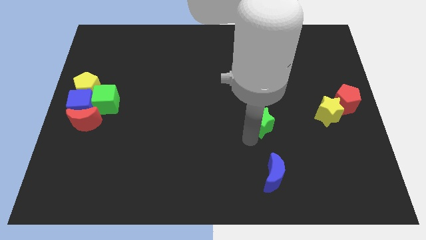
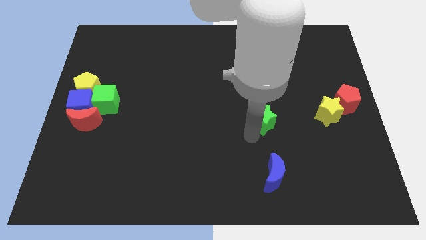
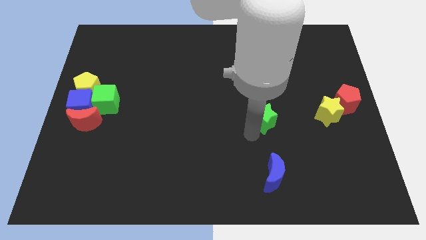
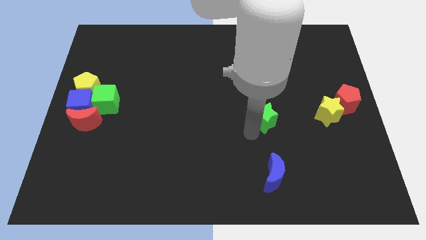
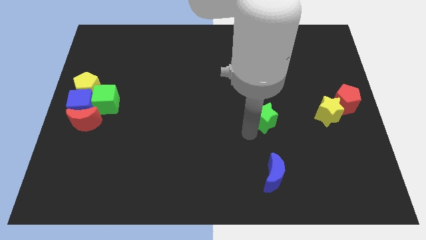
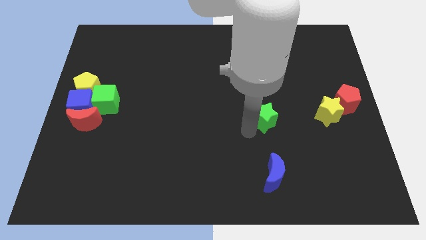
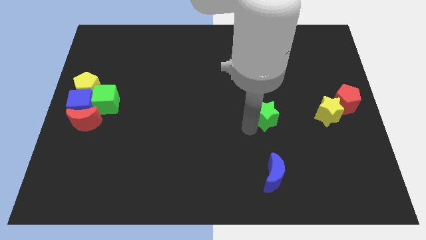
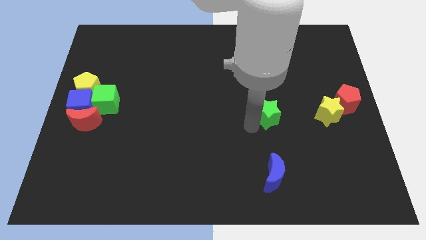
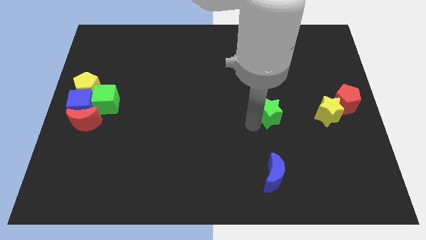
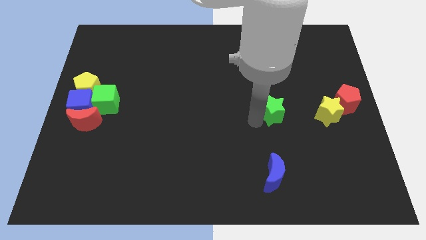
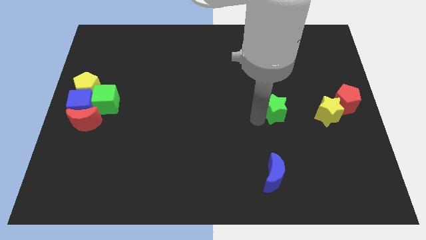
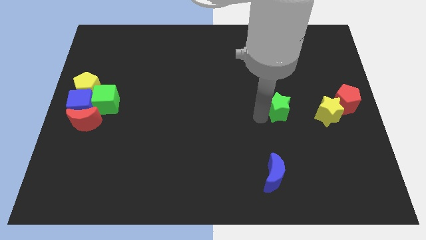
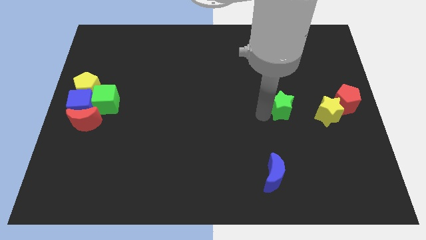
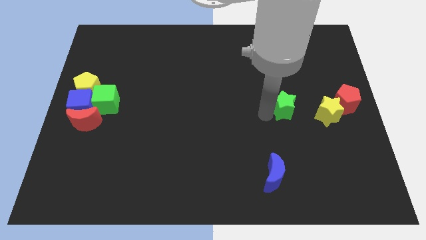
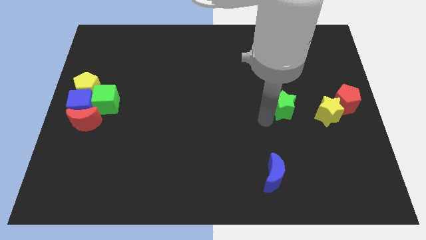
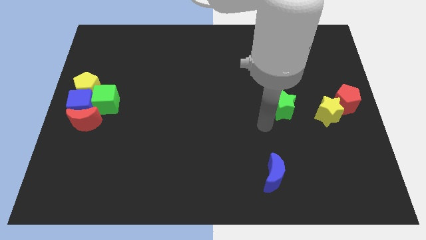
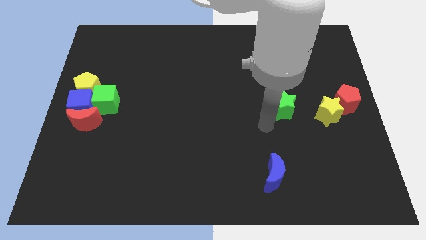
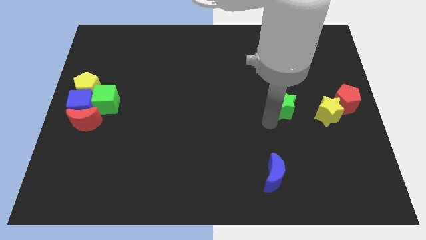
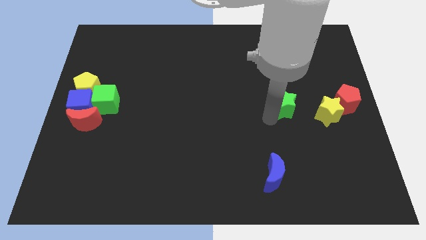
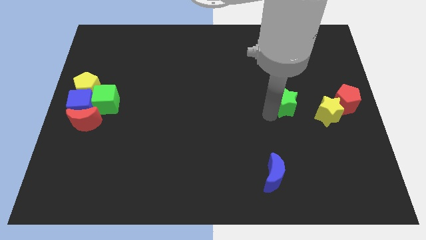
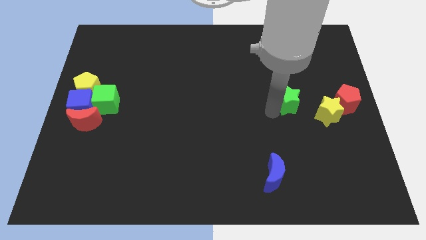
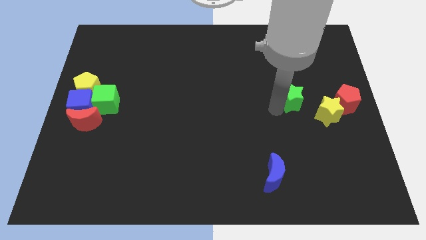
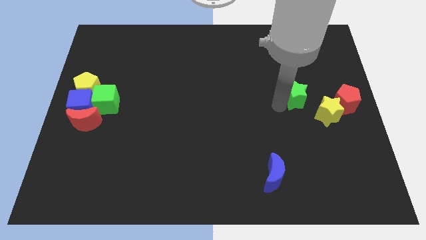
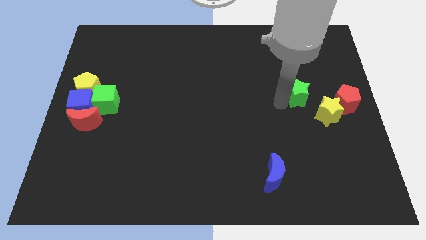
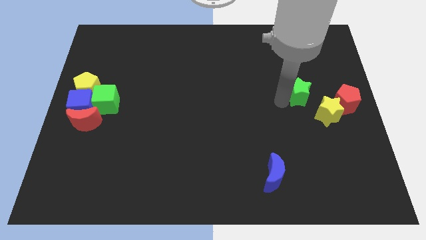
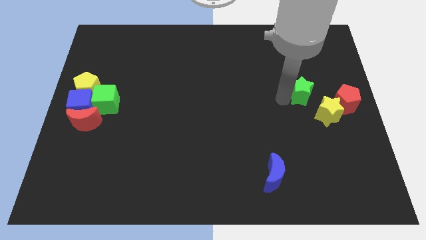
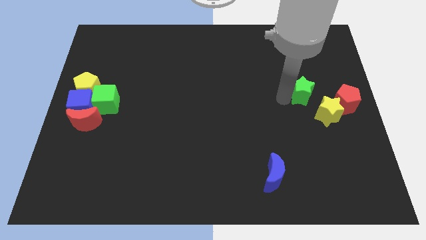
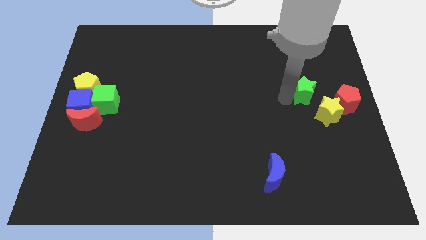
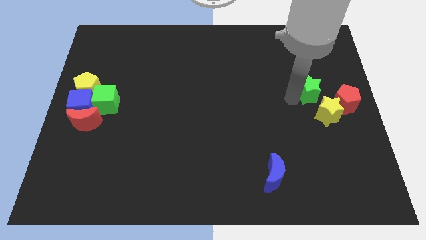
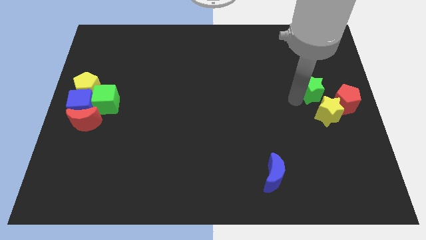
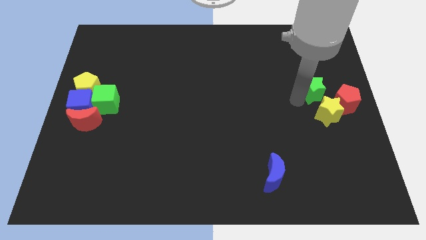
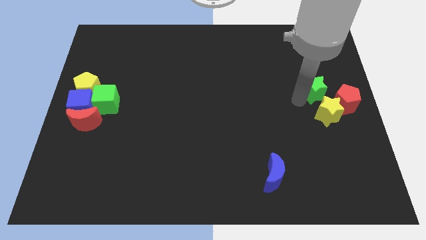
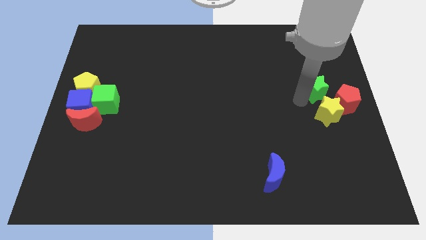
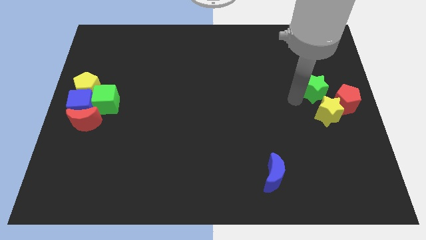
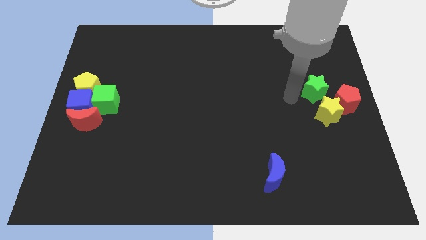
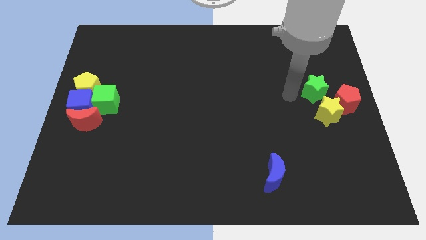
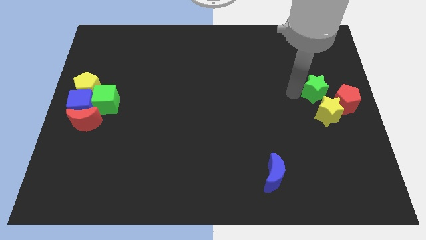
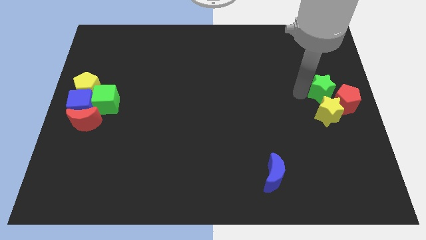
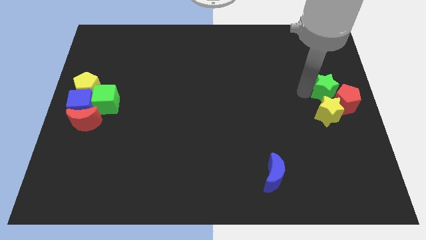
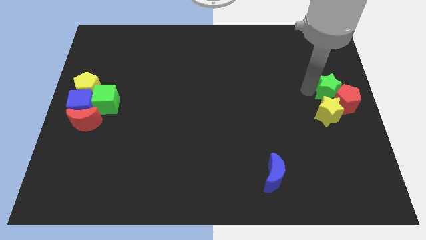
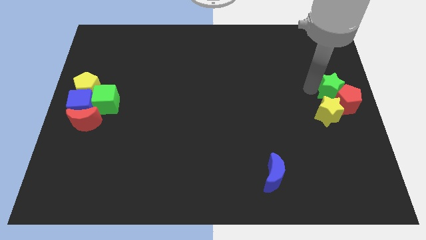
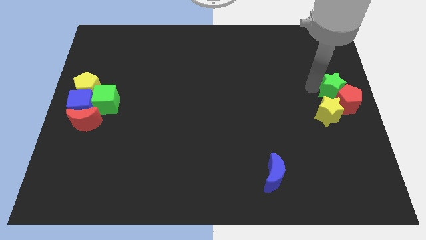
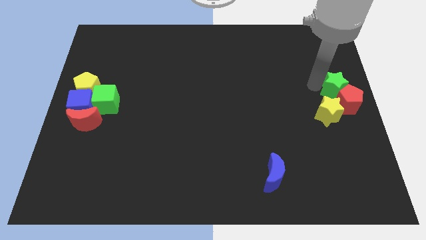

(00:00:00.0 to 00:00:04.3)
push the green star into the red pentagon

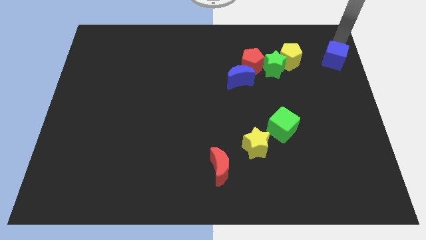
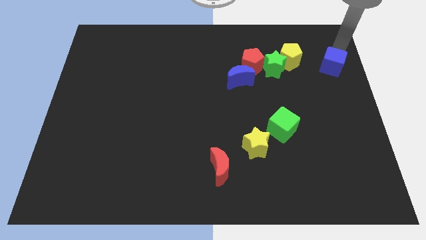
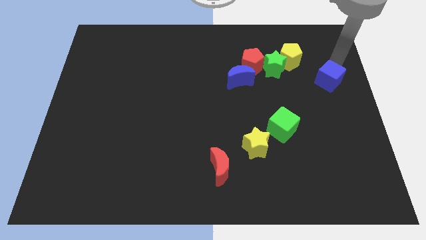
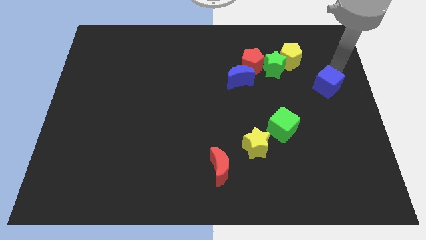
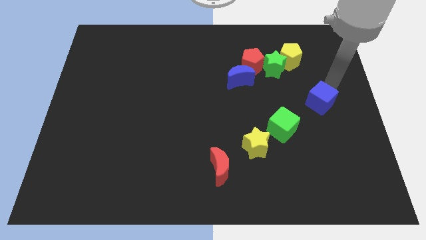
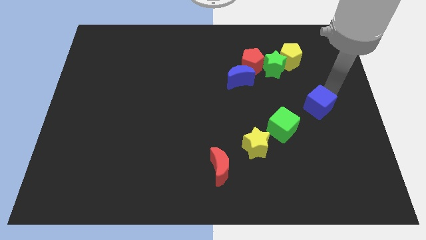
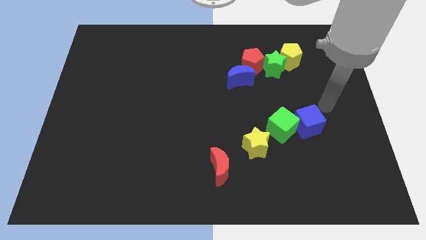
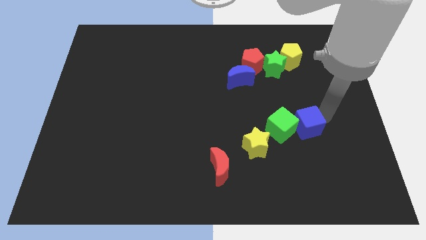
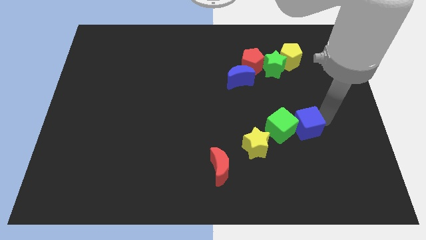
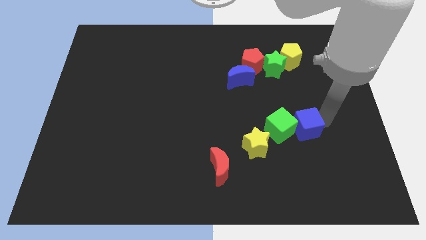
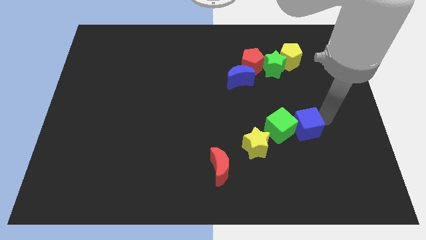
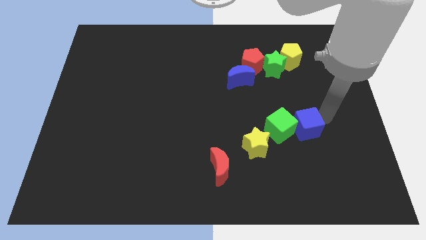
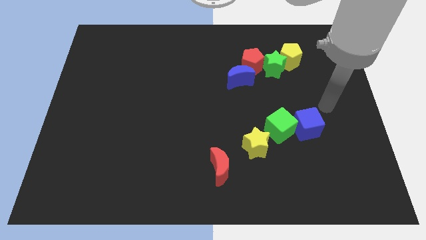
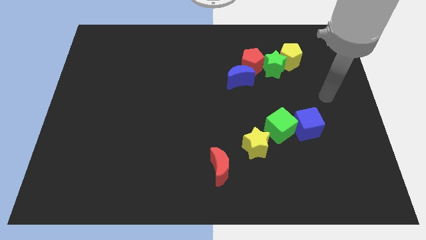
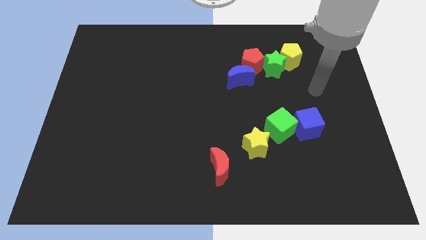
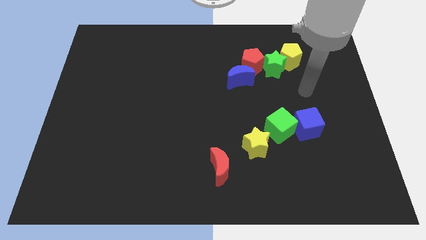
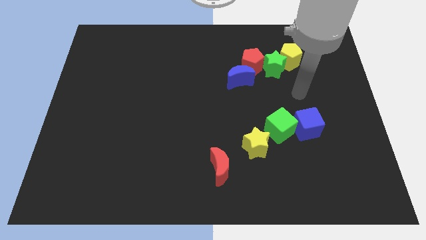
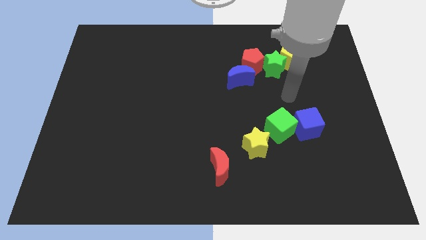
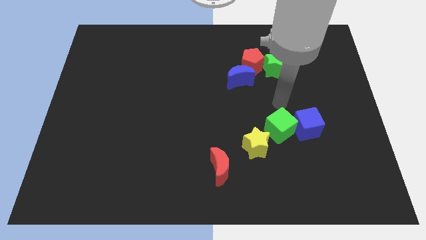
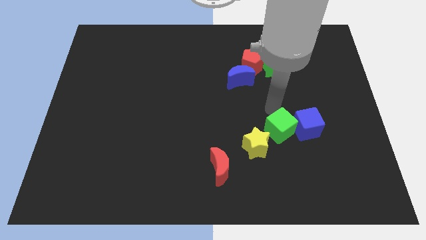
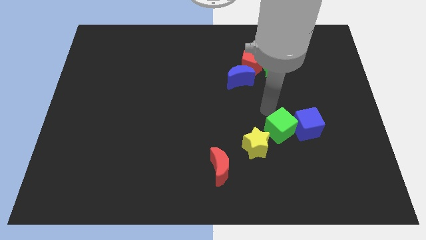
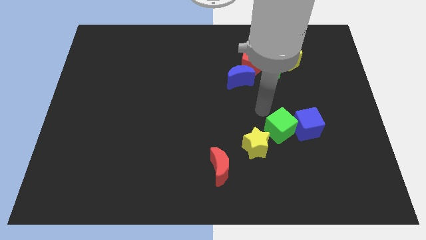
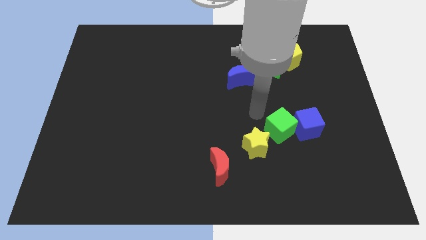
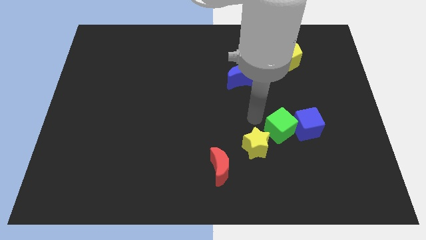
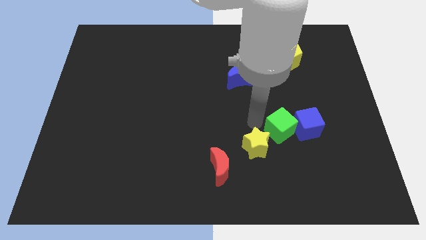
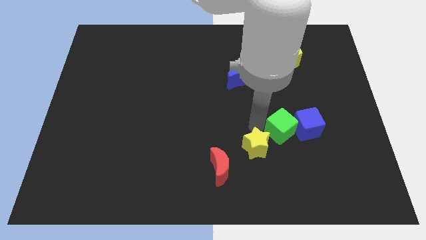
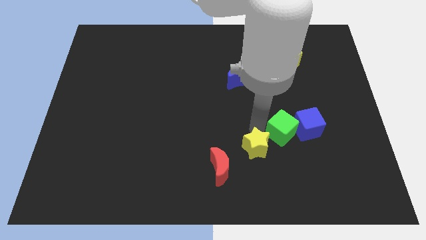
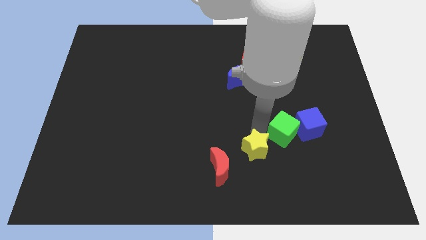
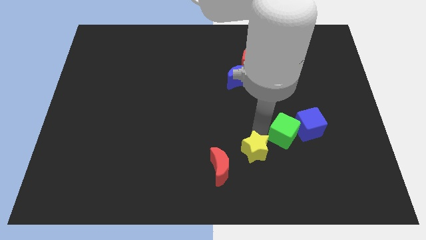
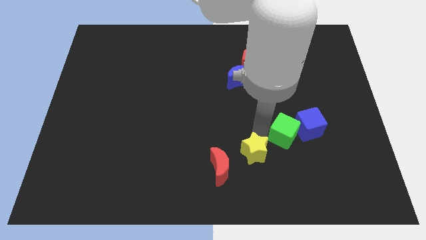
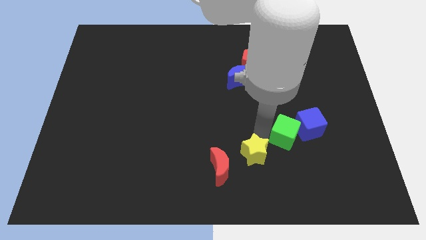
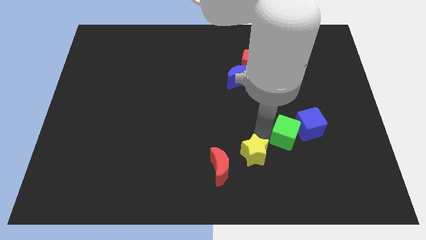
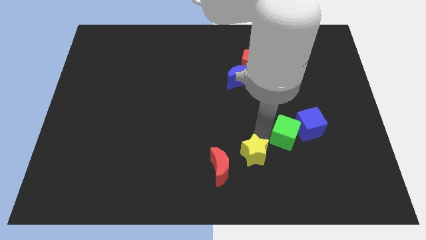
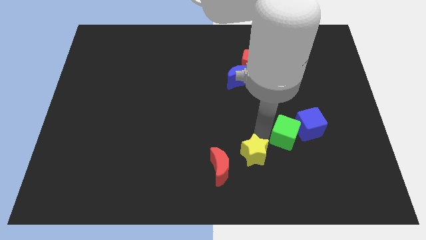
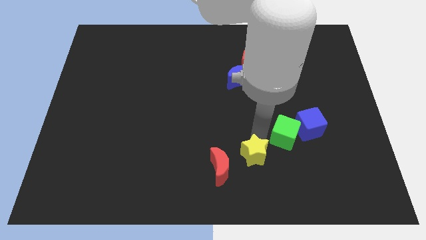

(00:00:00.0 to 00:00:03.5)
make a diagonal line with the blue cube green cube yellow star and red moon

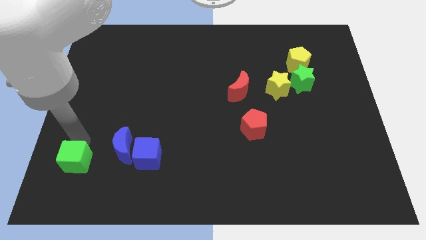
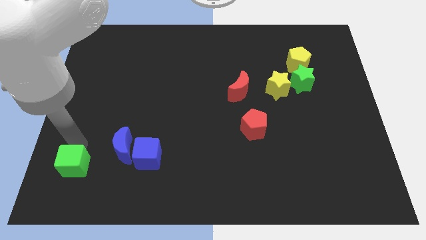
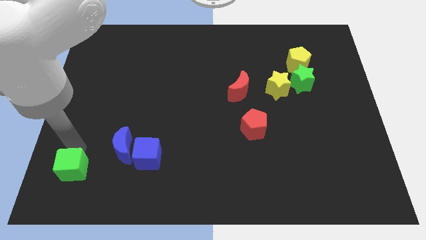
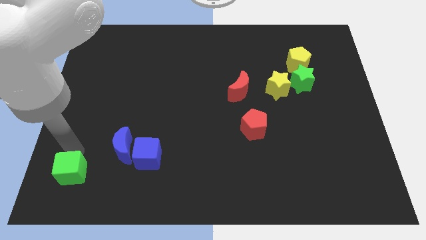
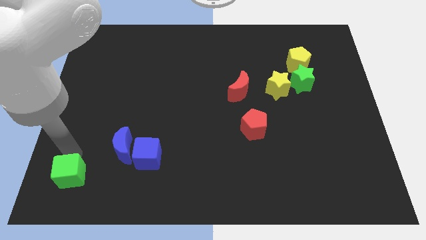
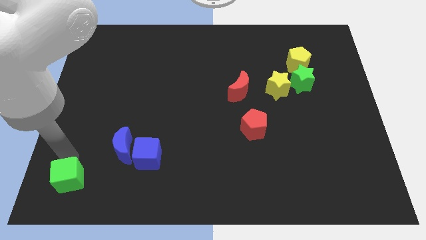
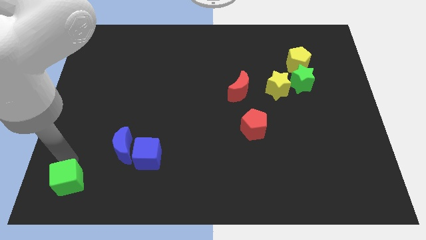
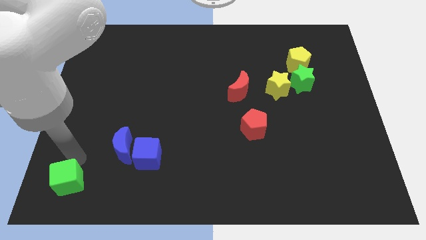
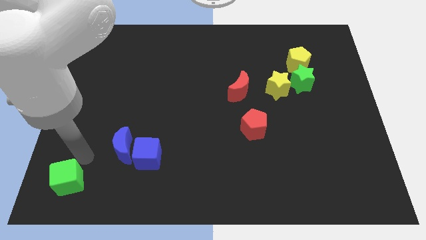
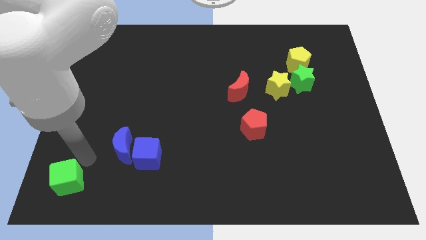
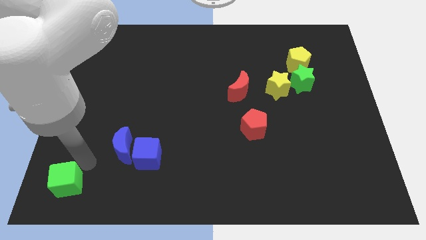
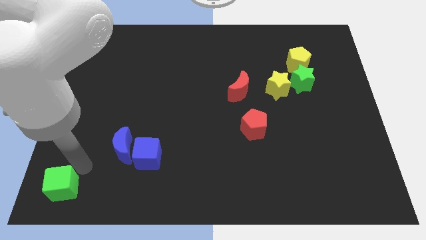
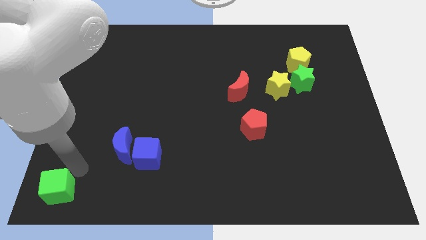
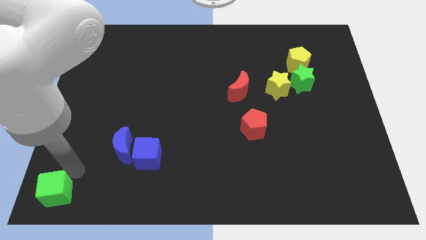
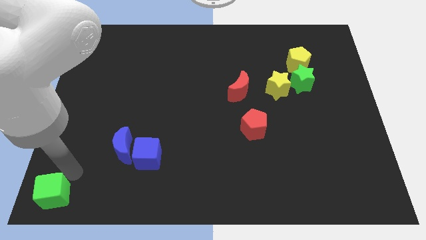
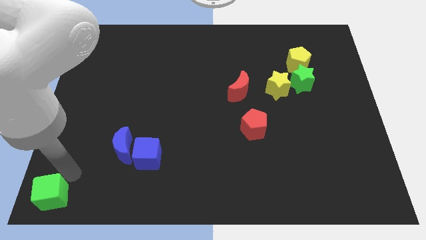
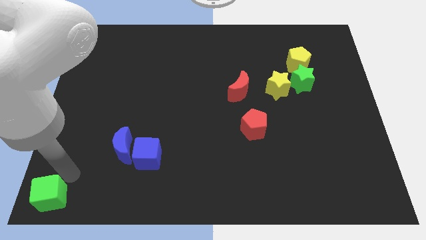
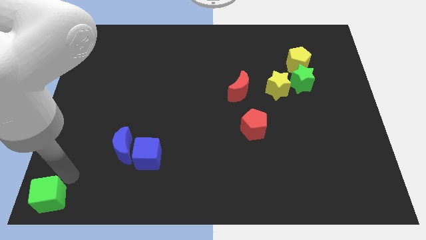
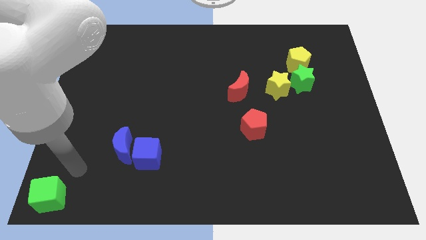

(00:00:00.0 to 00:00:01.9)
move the green cube to the bottom left corner of the board
